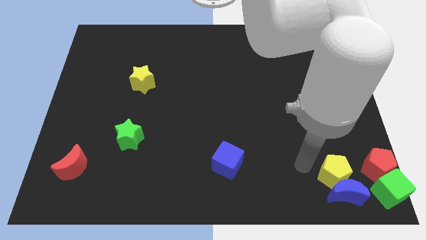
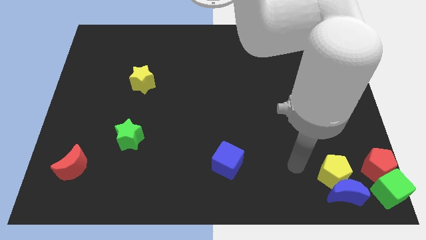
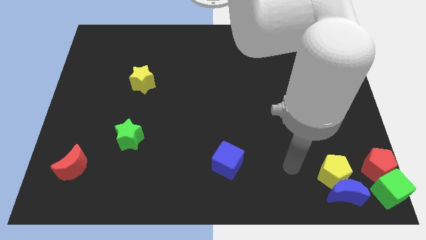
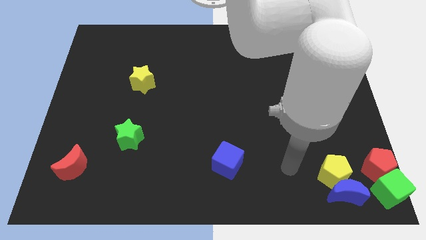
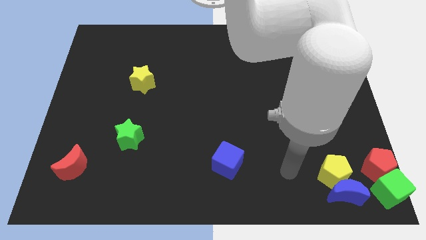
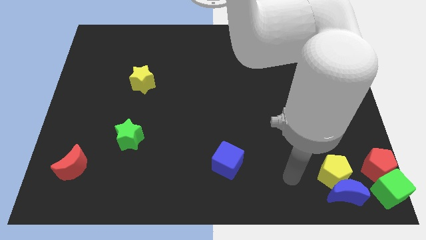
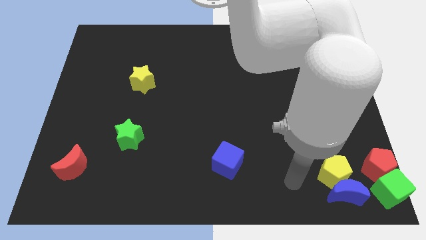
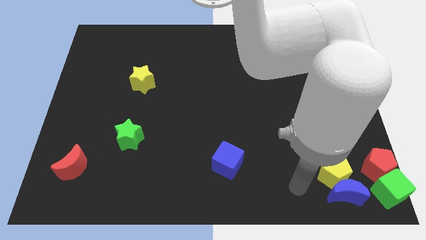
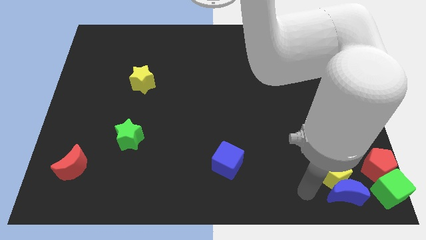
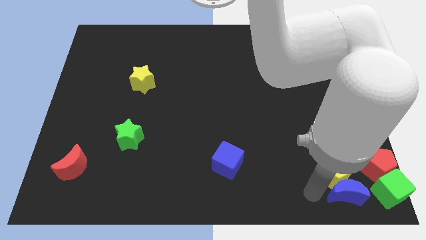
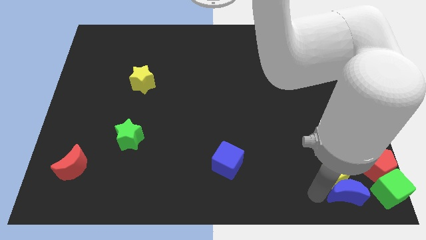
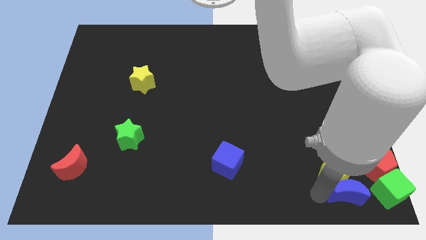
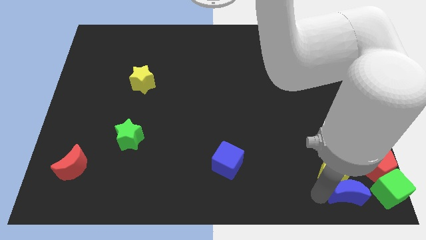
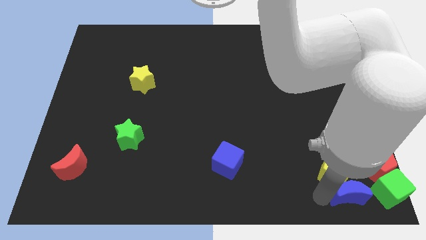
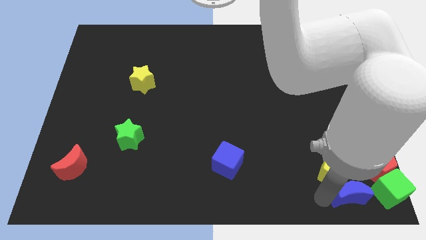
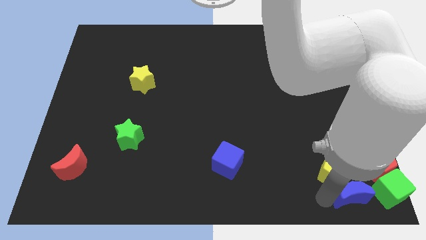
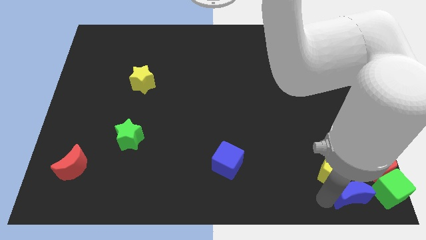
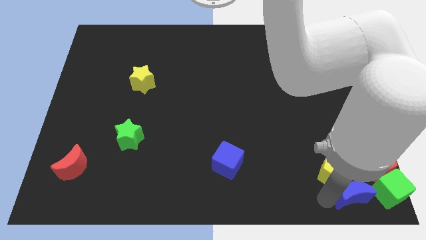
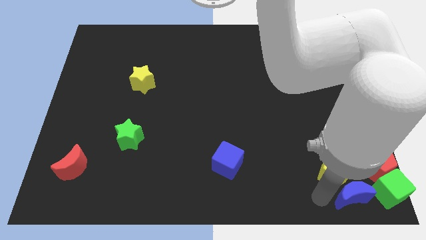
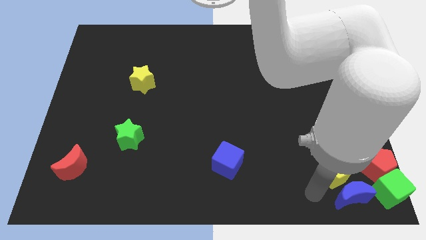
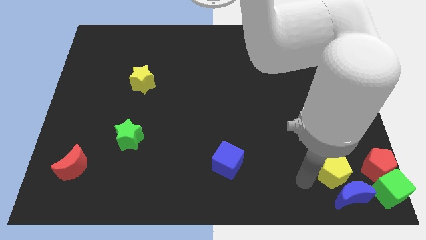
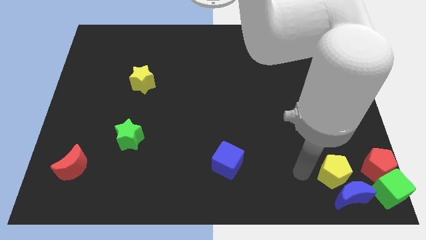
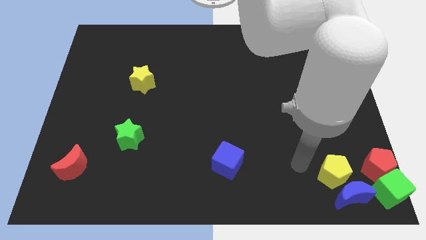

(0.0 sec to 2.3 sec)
push blue moon towards green cube

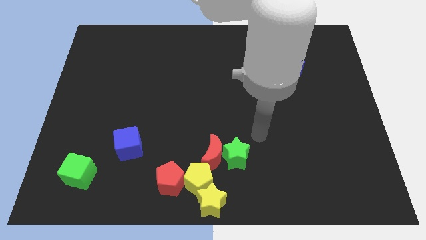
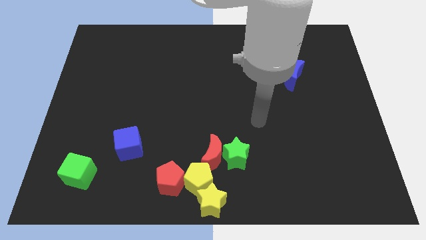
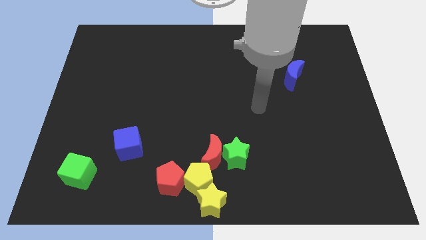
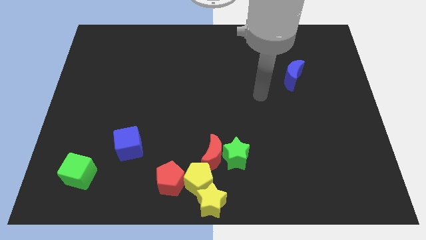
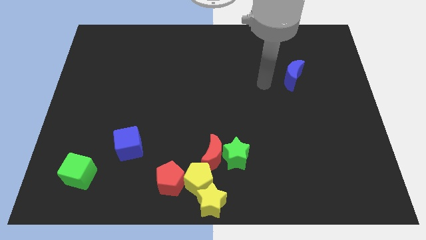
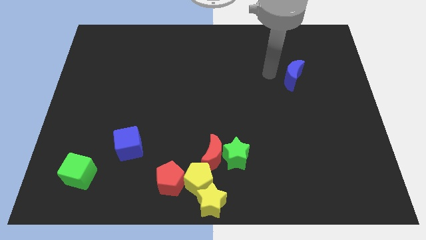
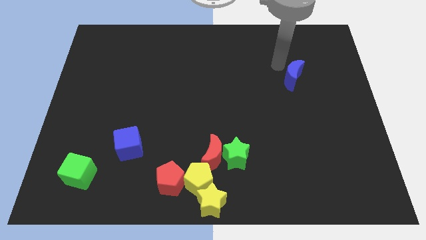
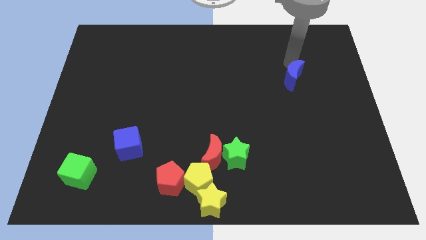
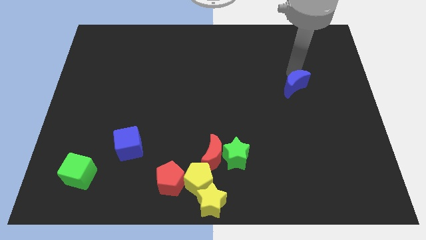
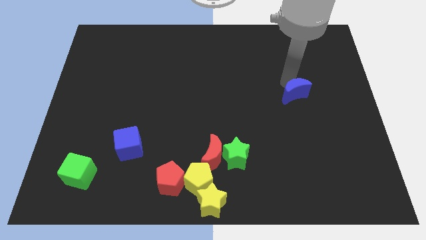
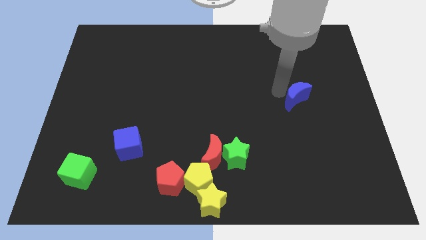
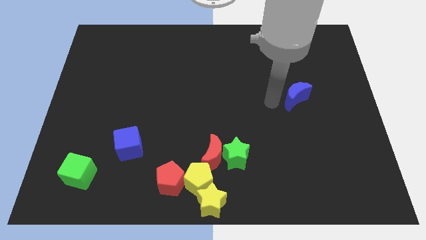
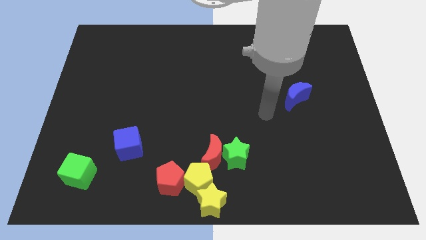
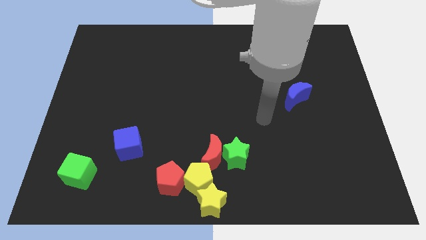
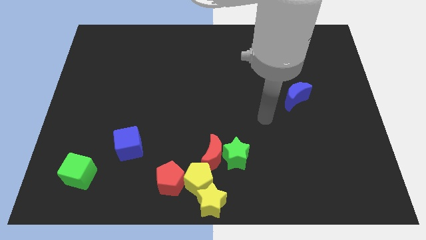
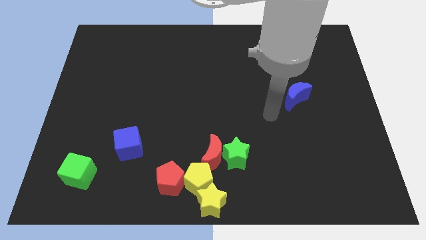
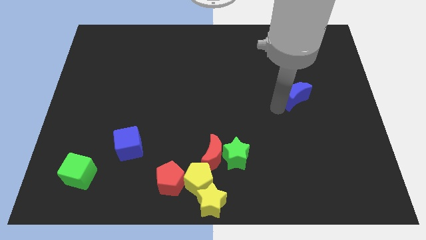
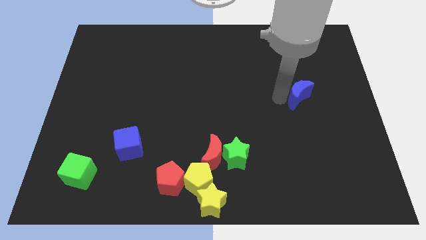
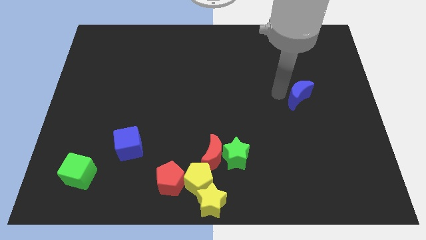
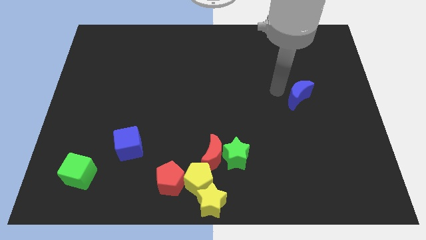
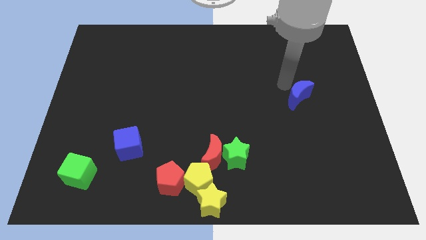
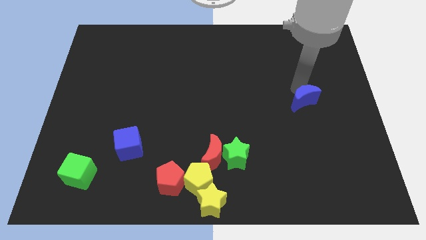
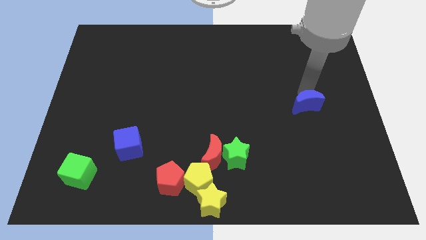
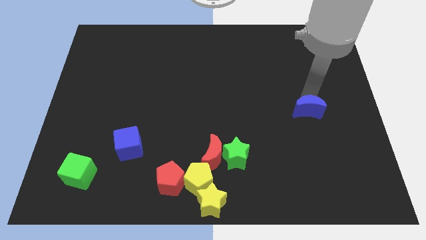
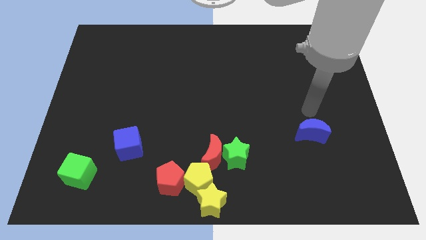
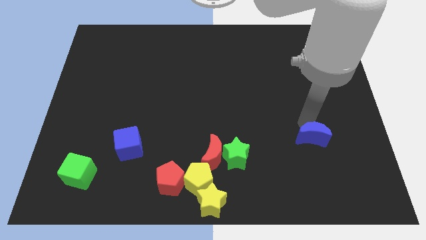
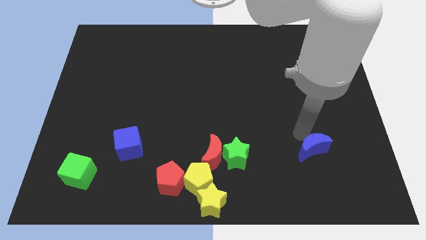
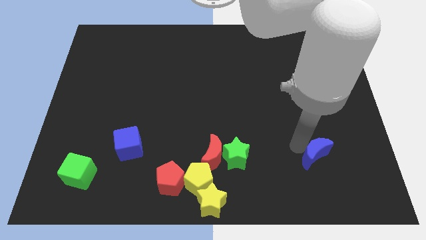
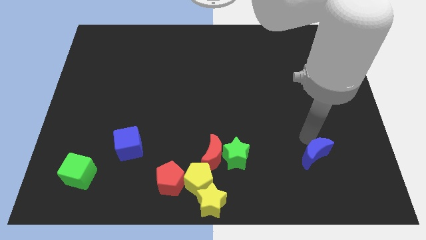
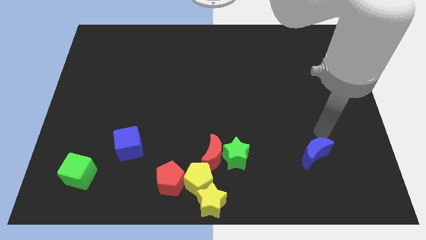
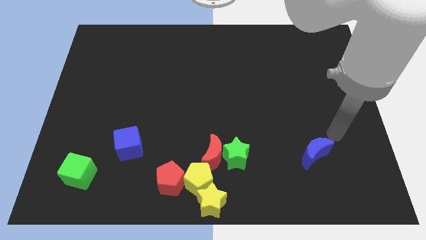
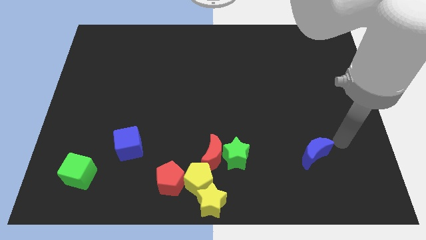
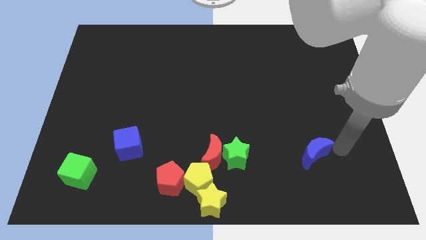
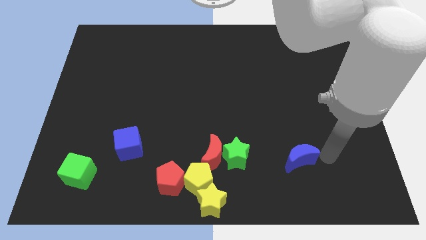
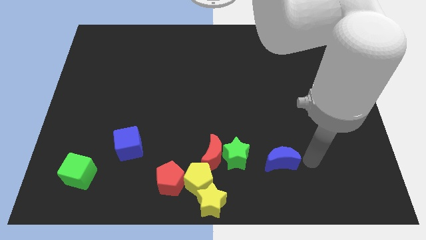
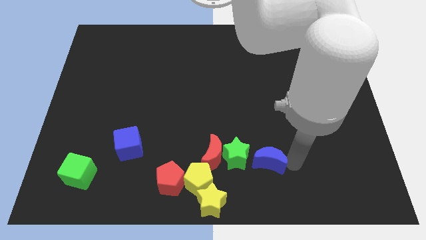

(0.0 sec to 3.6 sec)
move the blue crescent to the right side of the green star

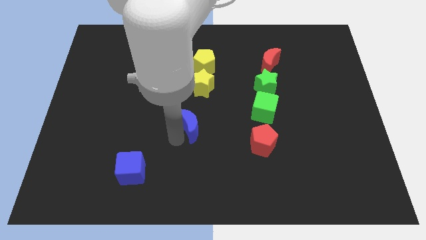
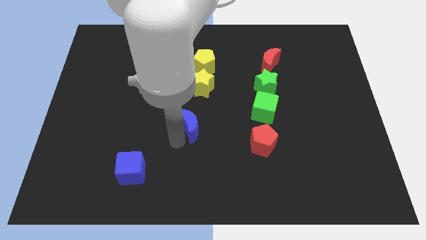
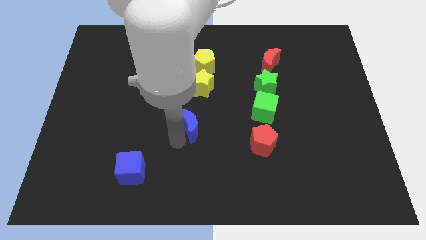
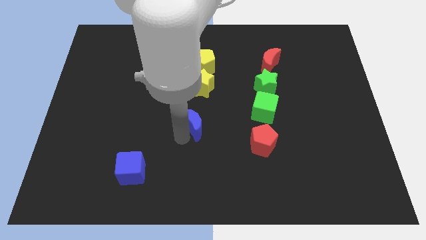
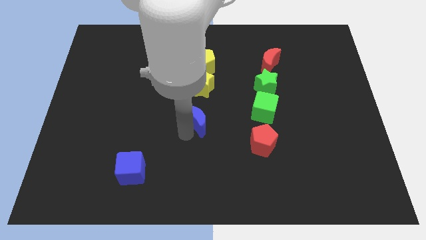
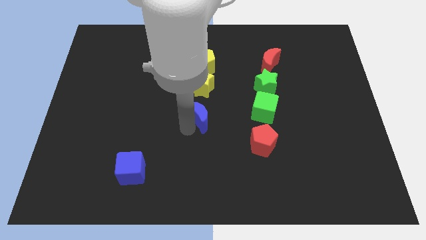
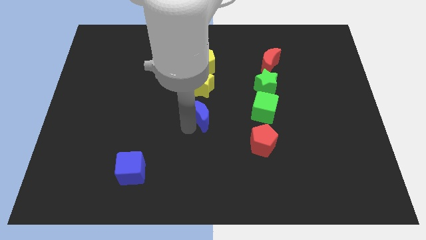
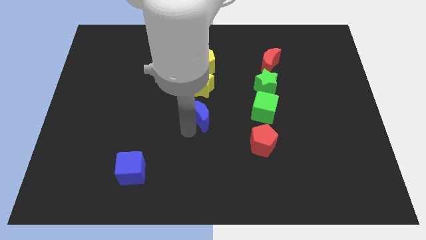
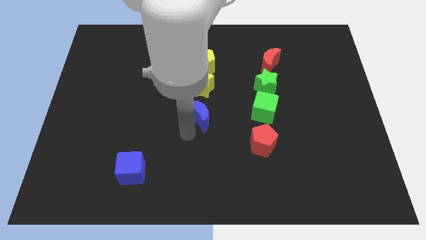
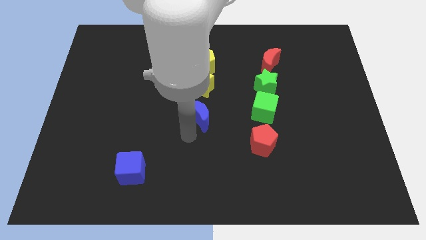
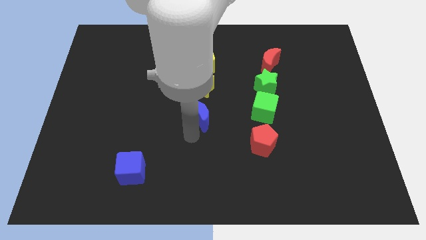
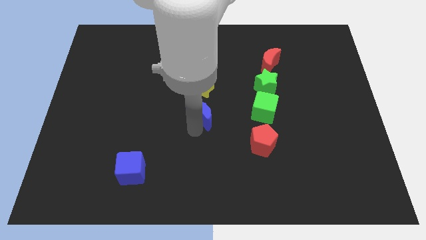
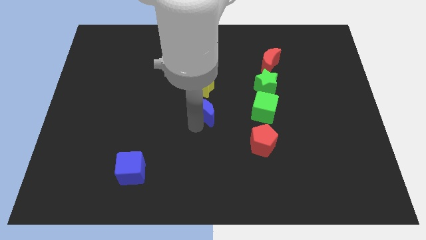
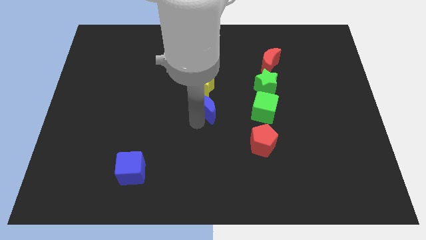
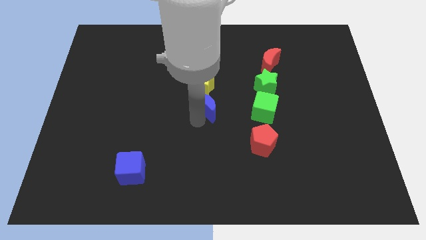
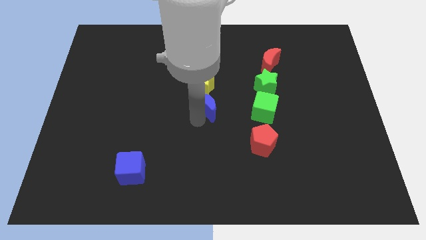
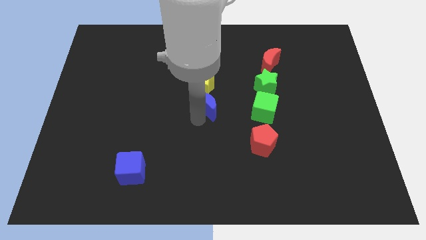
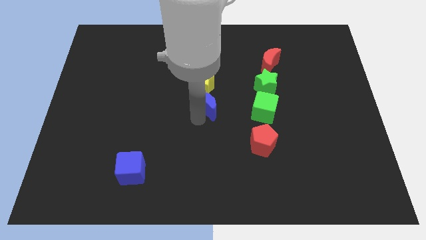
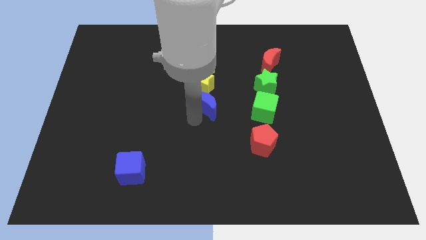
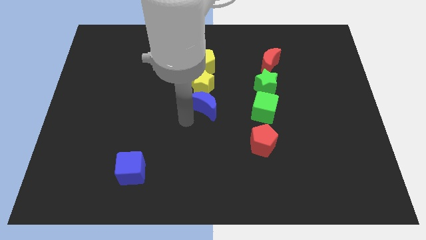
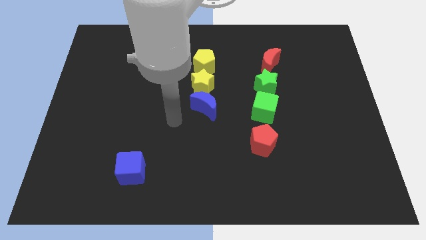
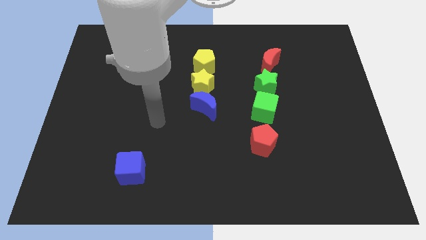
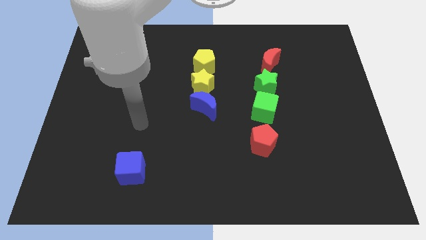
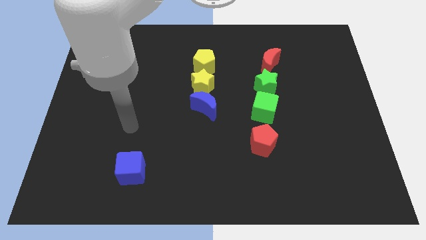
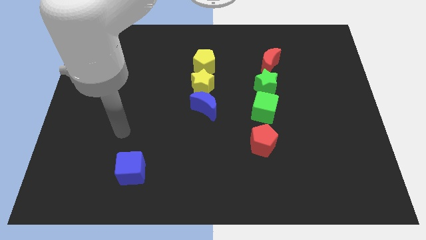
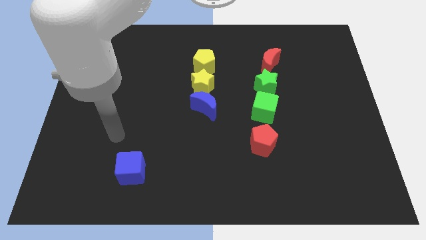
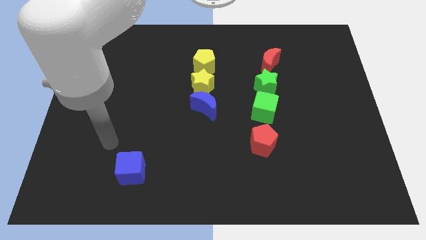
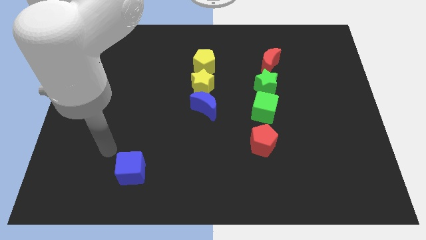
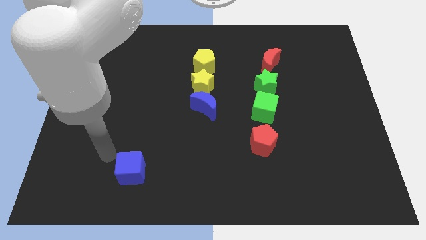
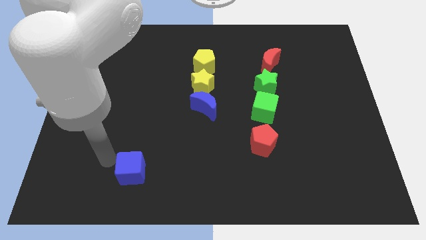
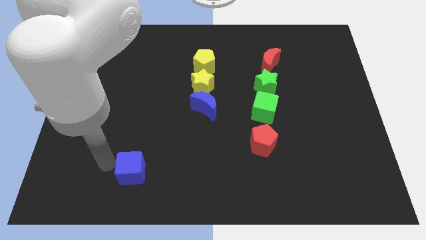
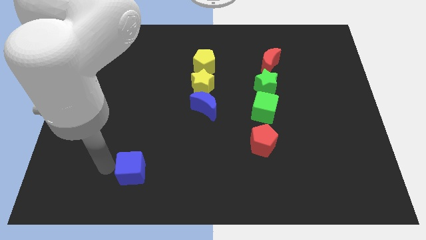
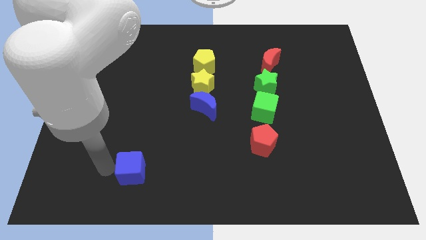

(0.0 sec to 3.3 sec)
move the blue moon to the left of the green cube
